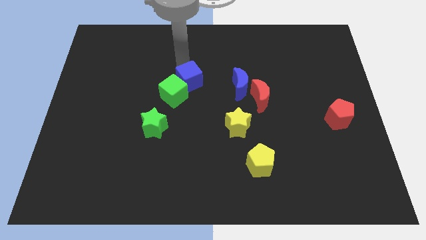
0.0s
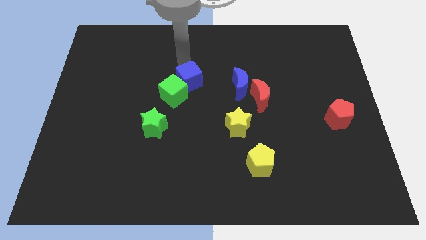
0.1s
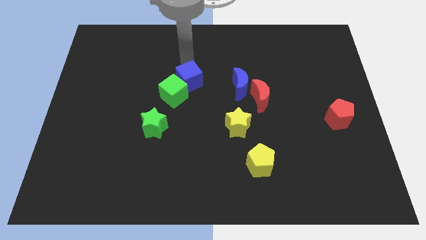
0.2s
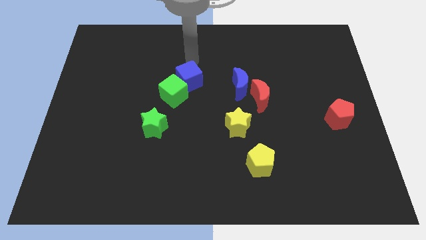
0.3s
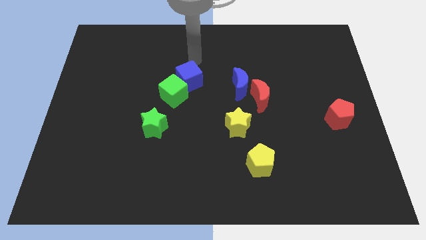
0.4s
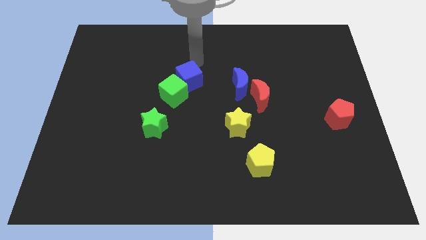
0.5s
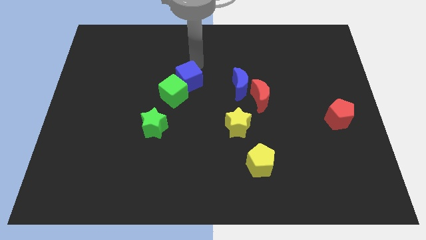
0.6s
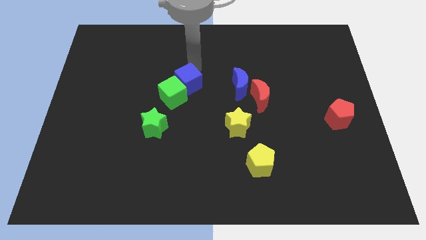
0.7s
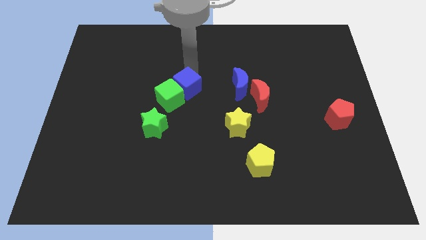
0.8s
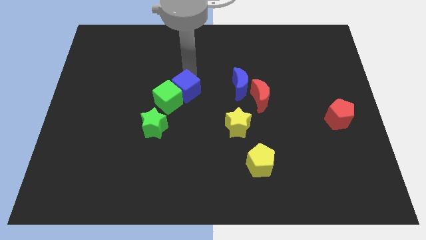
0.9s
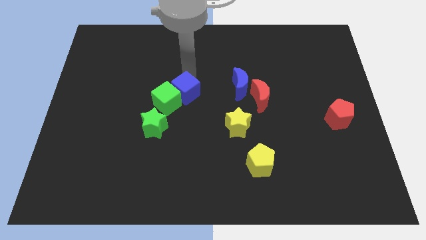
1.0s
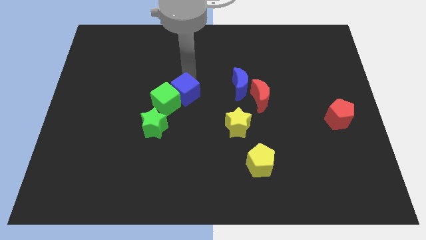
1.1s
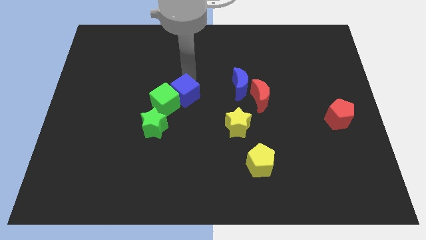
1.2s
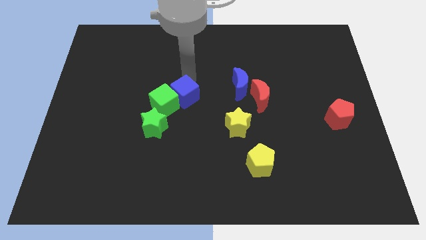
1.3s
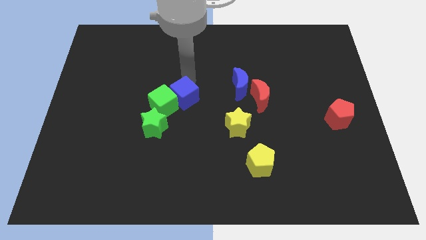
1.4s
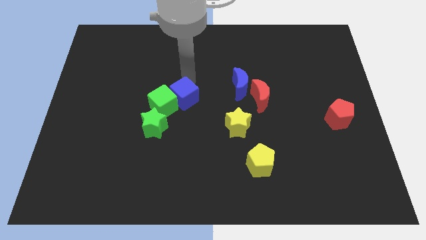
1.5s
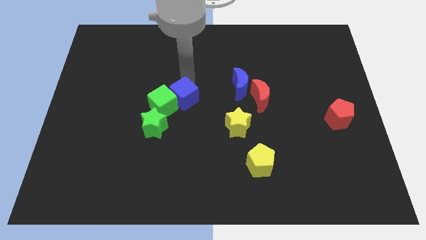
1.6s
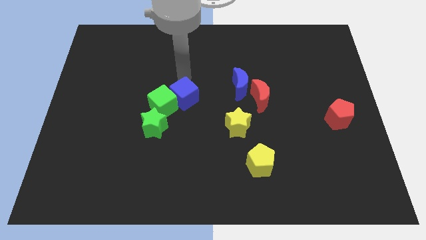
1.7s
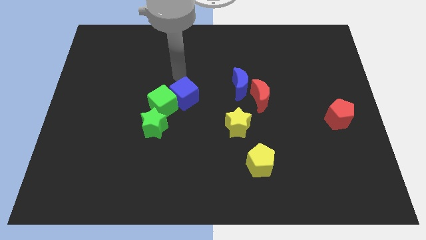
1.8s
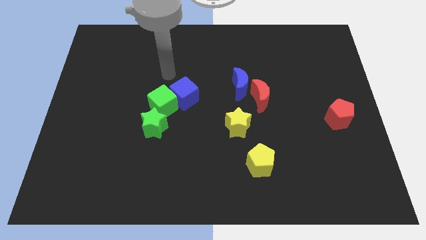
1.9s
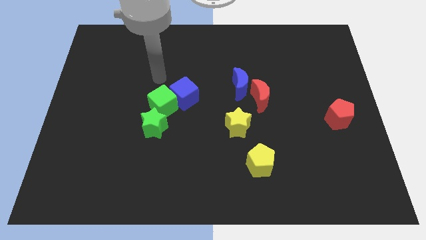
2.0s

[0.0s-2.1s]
push blue cube slightly towards down

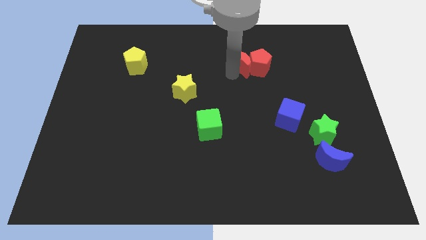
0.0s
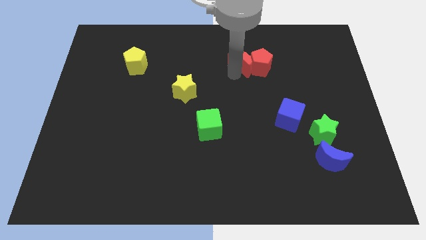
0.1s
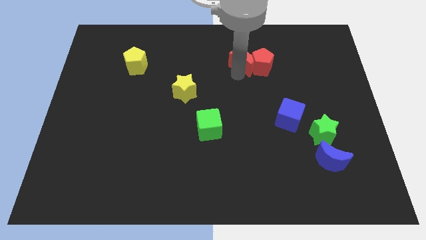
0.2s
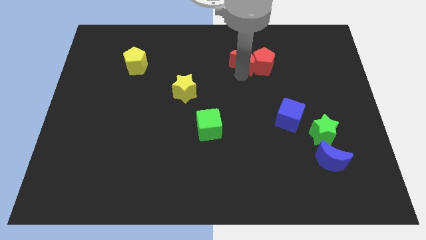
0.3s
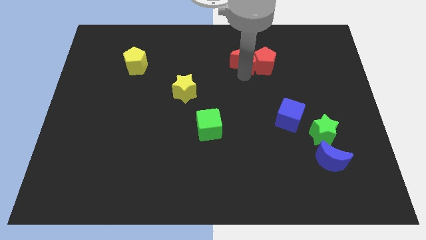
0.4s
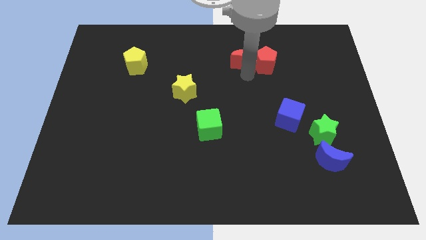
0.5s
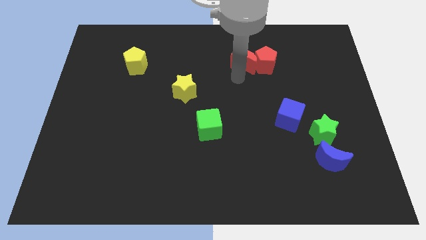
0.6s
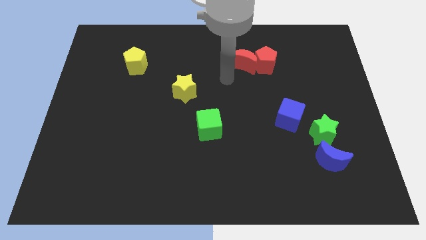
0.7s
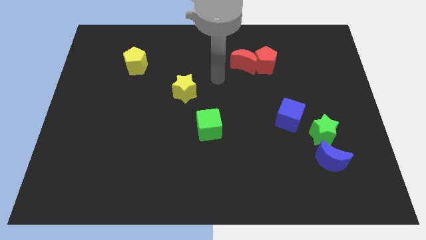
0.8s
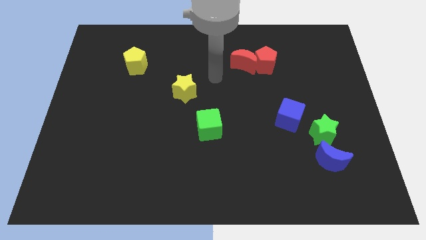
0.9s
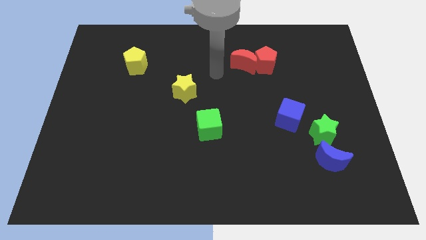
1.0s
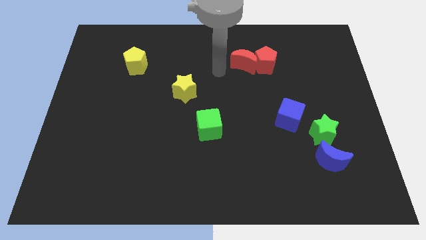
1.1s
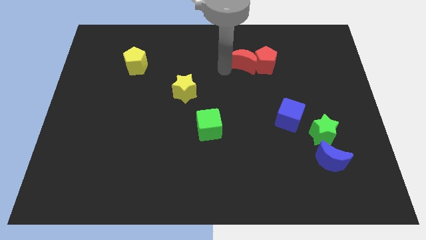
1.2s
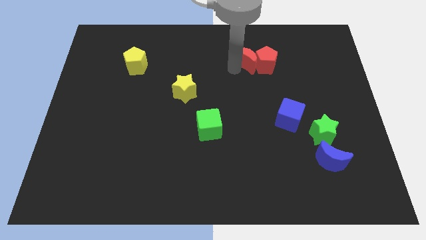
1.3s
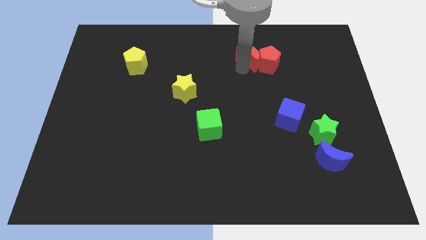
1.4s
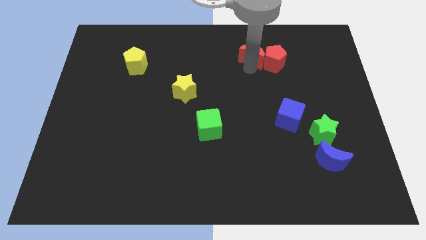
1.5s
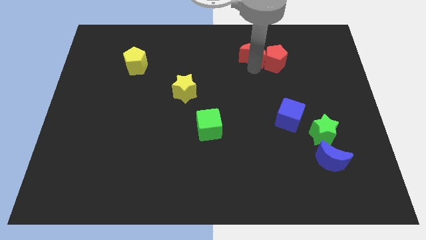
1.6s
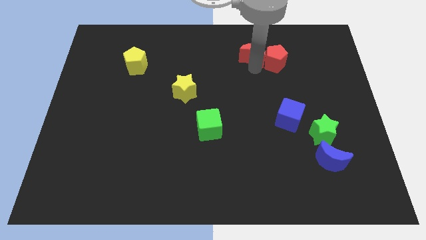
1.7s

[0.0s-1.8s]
push two red blocks a bit right

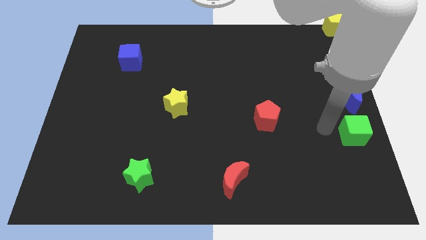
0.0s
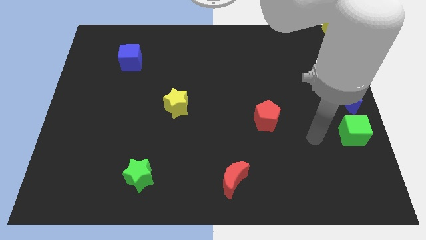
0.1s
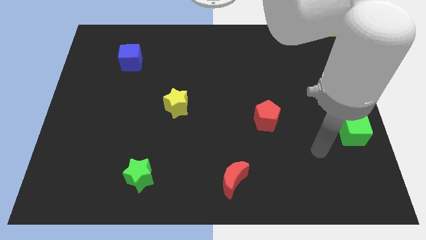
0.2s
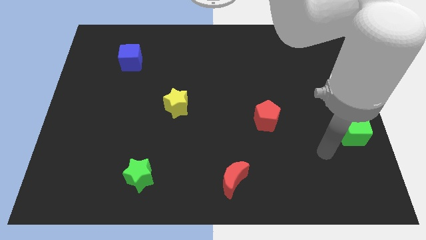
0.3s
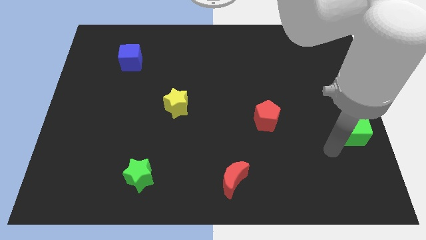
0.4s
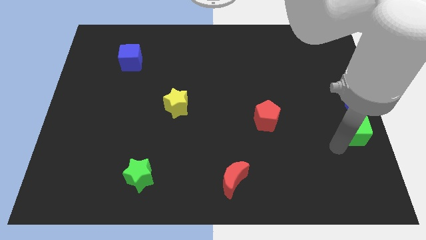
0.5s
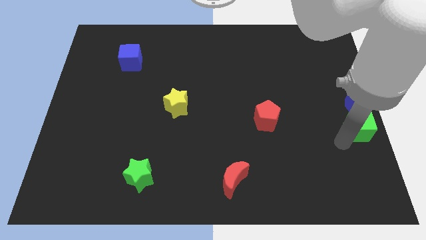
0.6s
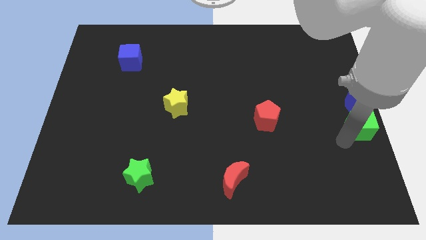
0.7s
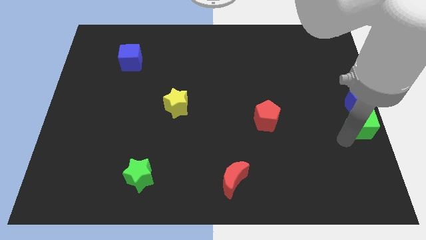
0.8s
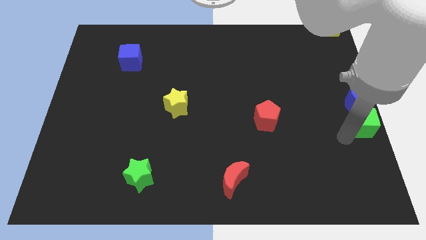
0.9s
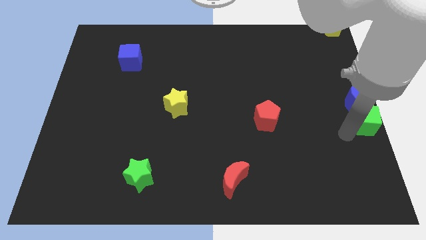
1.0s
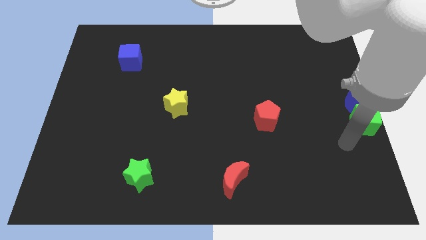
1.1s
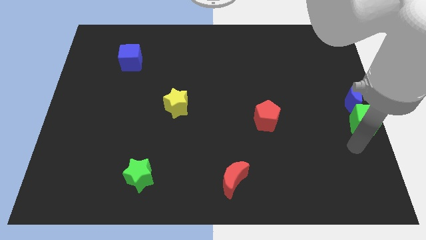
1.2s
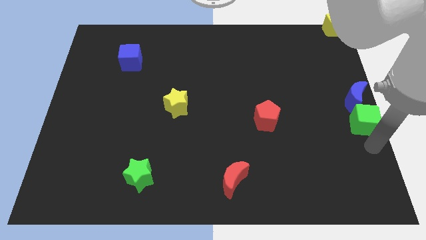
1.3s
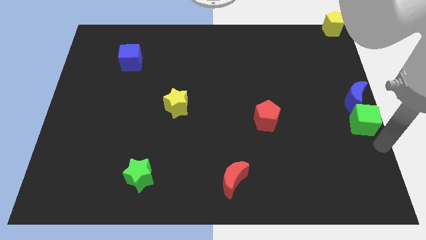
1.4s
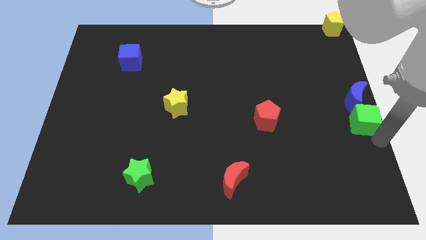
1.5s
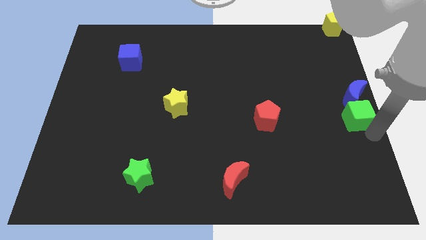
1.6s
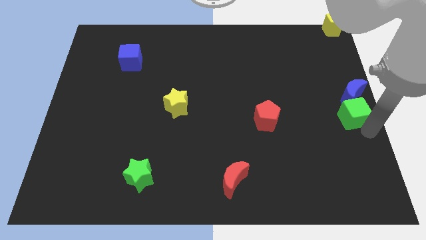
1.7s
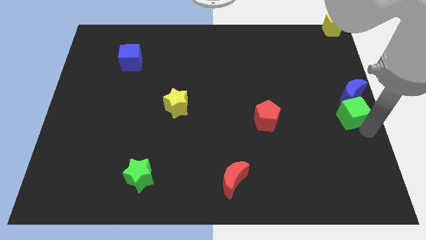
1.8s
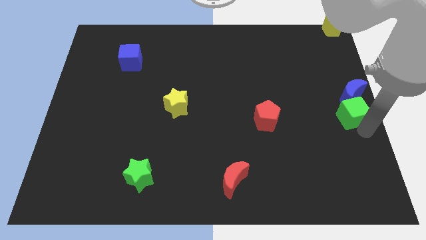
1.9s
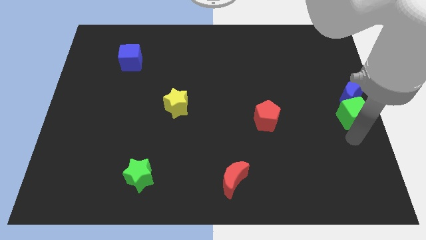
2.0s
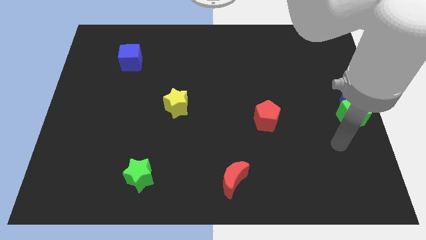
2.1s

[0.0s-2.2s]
push the green cube into blue crescent

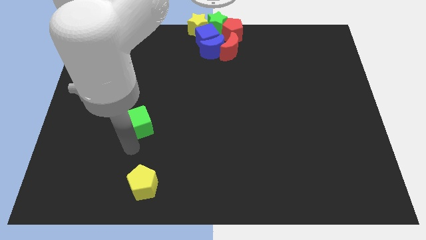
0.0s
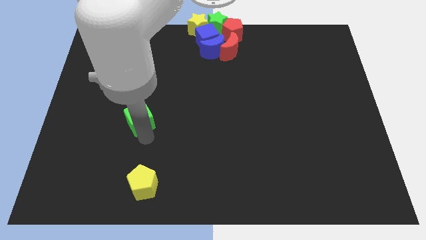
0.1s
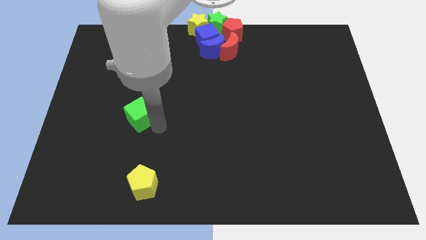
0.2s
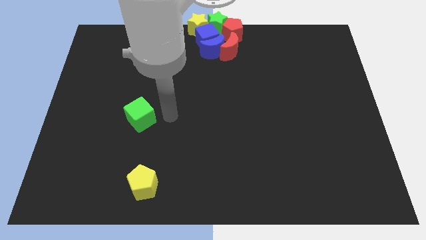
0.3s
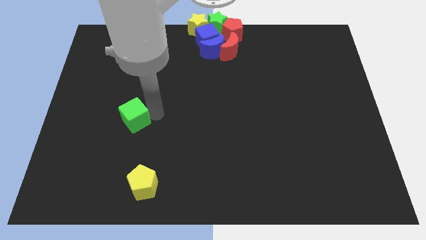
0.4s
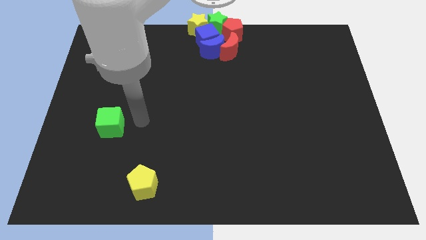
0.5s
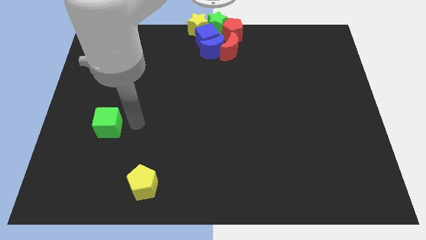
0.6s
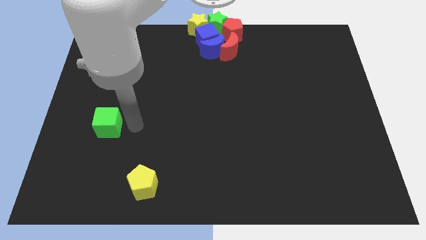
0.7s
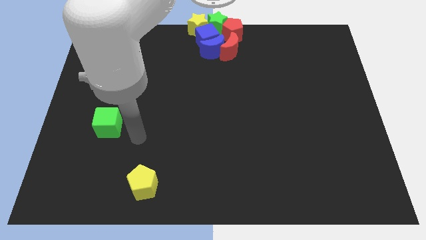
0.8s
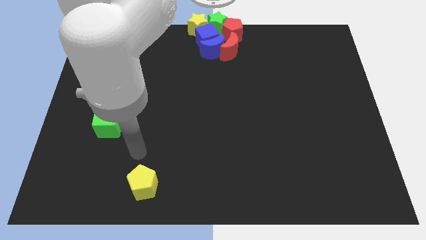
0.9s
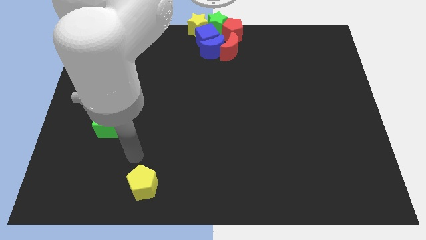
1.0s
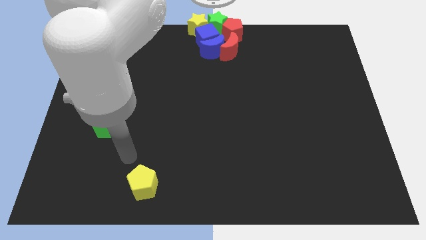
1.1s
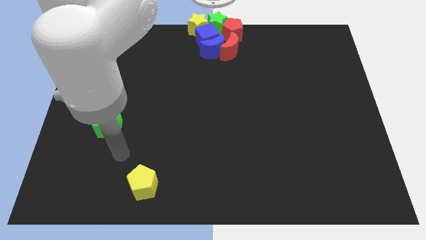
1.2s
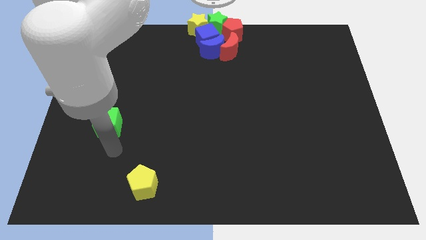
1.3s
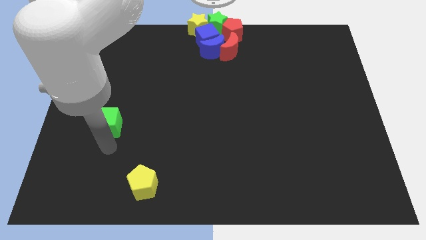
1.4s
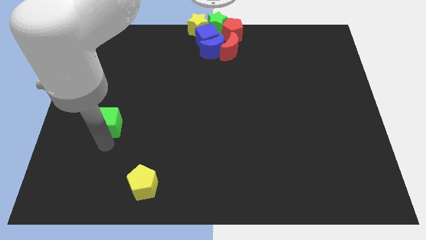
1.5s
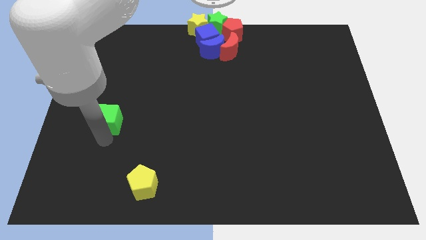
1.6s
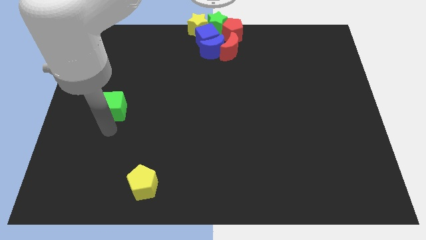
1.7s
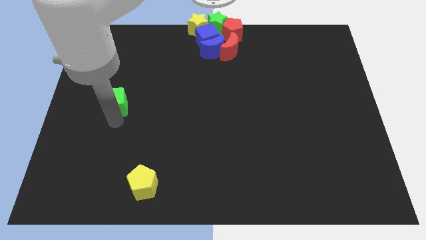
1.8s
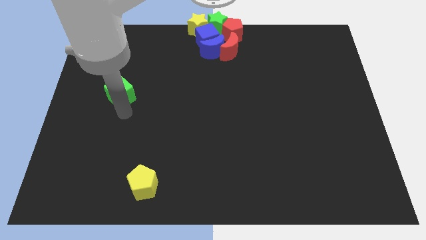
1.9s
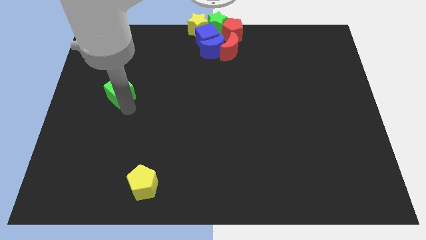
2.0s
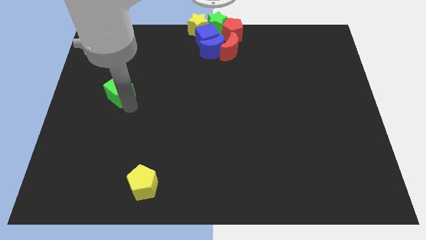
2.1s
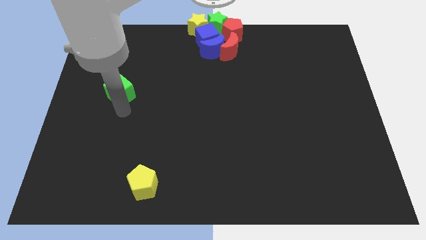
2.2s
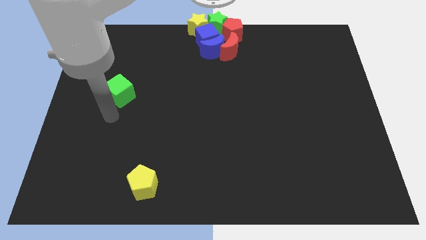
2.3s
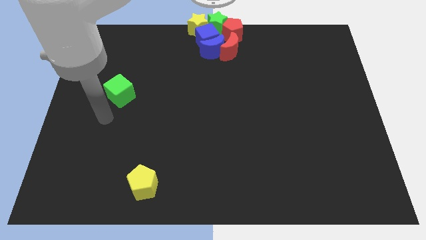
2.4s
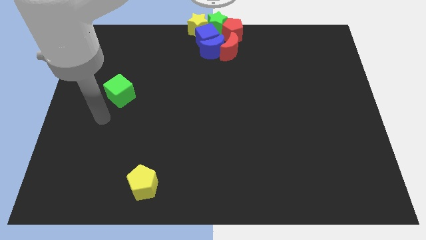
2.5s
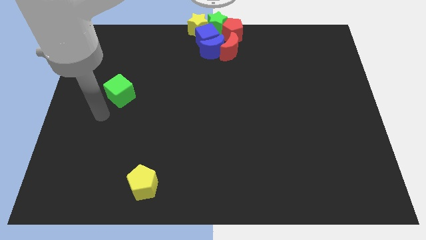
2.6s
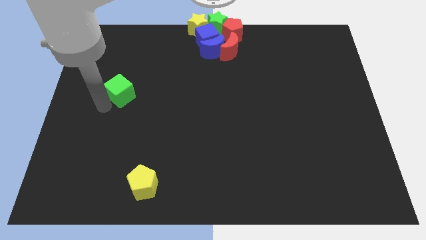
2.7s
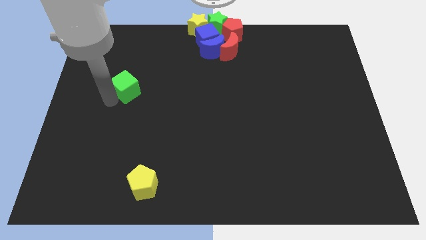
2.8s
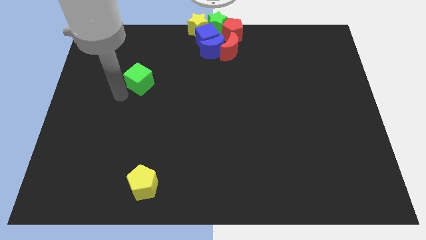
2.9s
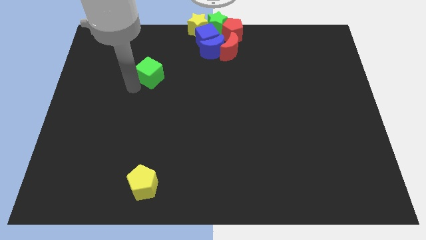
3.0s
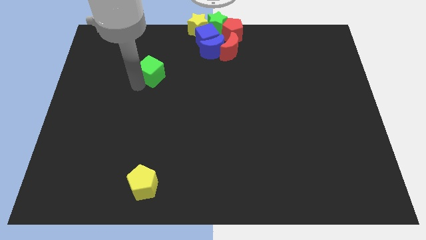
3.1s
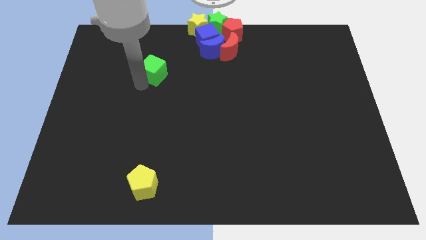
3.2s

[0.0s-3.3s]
put the green cube vertically on the top side of the yellow pentagon
